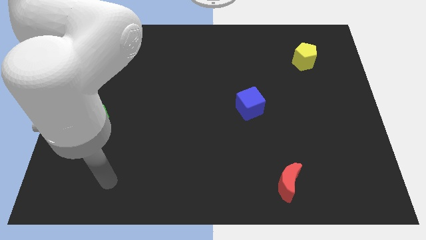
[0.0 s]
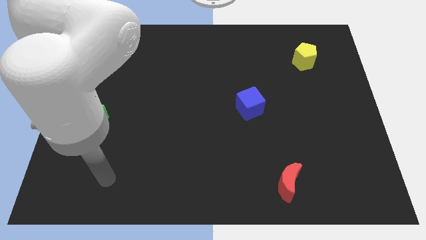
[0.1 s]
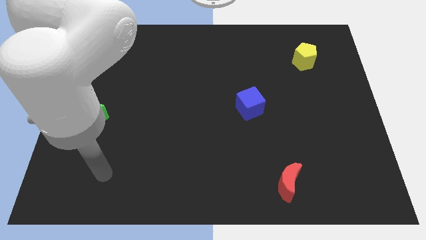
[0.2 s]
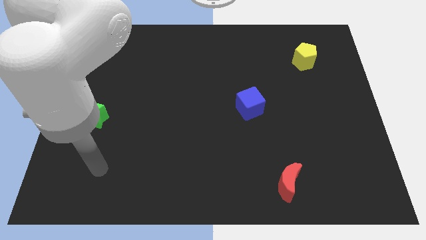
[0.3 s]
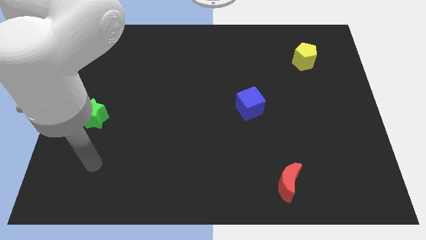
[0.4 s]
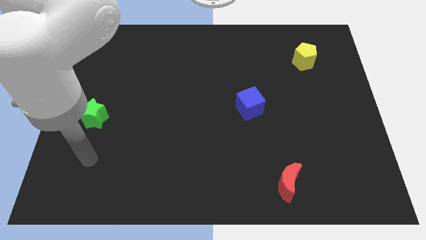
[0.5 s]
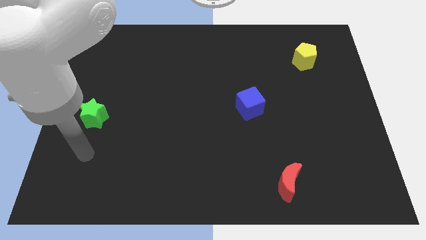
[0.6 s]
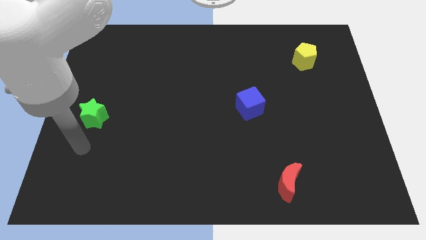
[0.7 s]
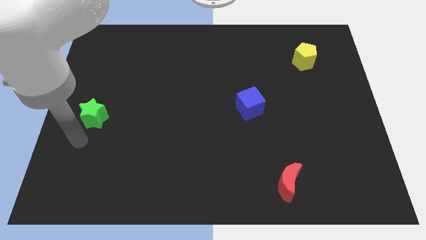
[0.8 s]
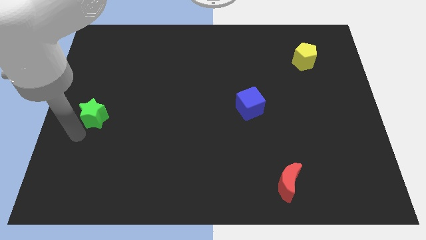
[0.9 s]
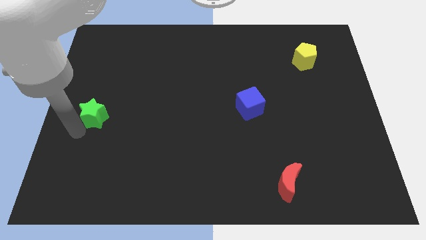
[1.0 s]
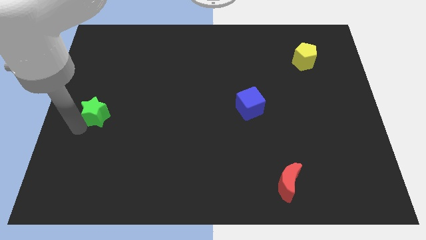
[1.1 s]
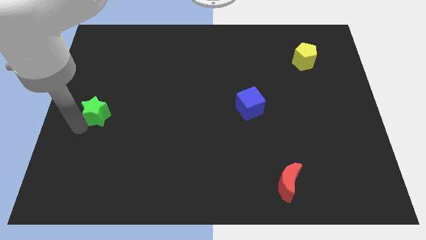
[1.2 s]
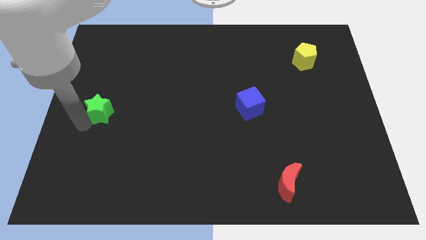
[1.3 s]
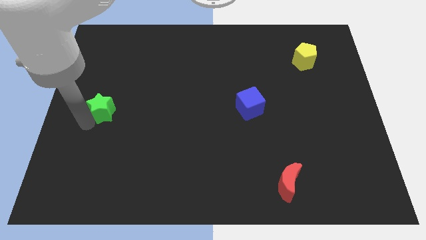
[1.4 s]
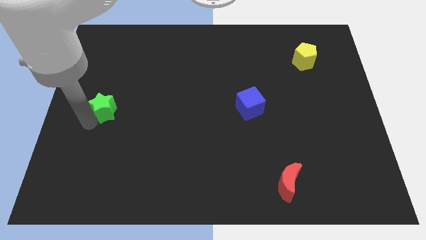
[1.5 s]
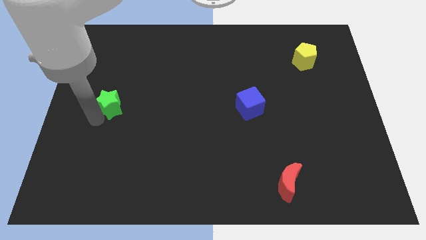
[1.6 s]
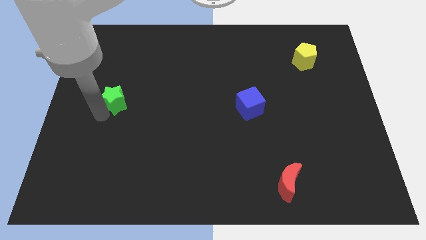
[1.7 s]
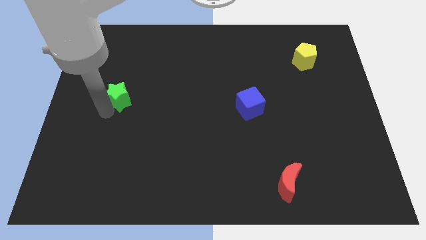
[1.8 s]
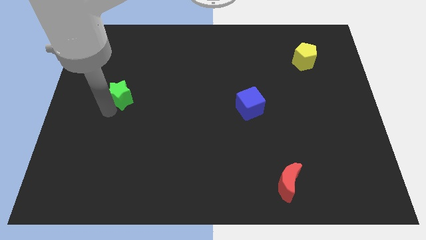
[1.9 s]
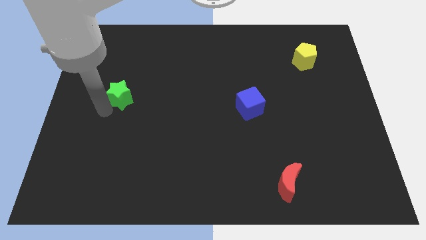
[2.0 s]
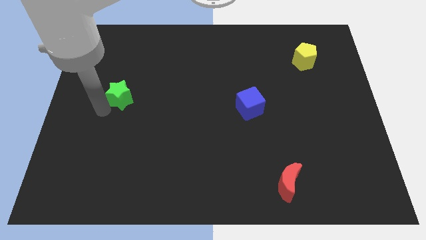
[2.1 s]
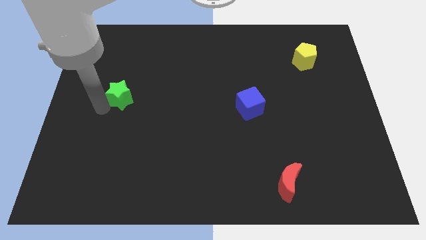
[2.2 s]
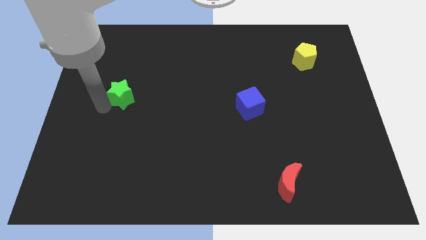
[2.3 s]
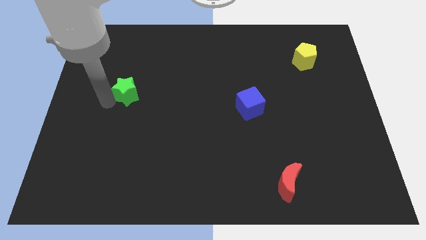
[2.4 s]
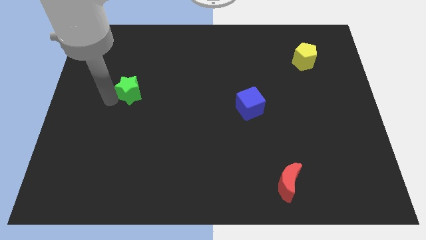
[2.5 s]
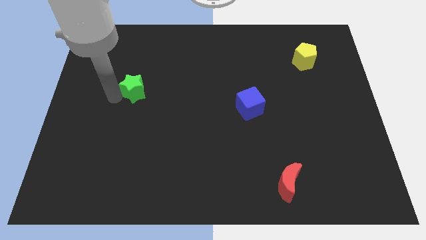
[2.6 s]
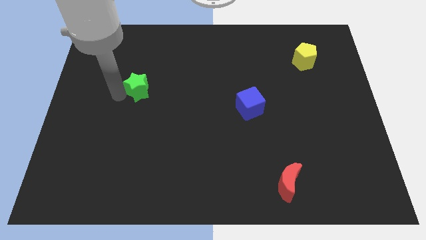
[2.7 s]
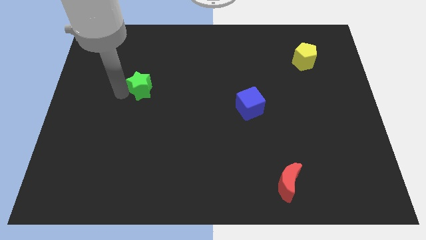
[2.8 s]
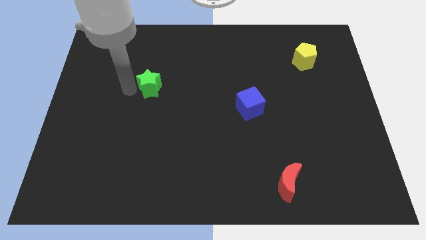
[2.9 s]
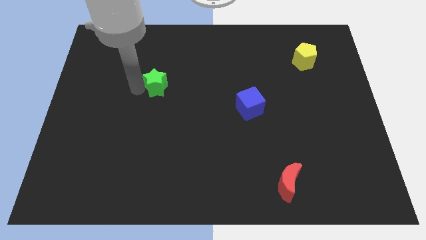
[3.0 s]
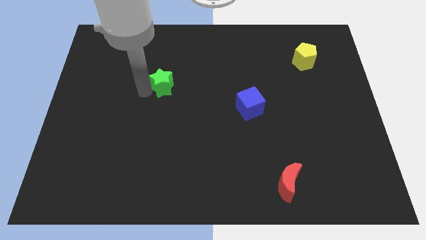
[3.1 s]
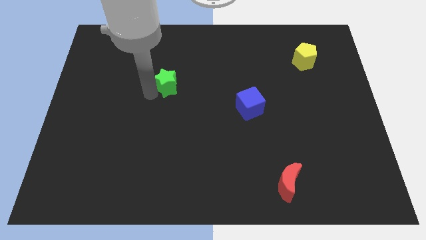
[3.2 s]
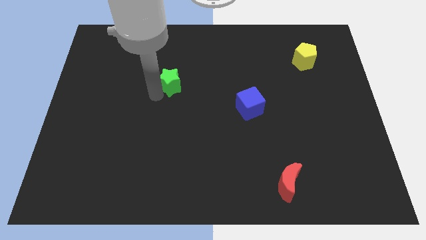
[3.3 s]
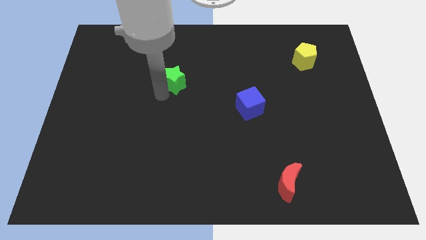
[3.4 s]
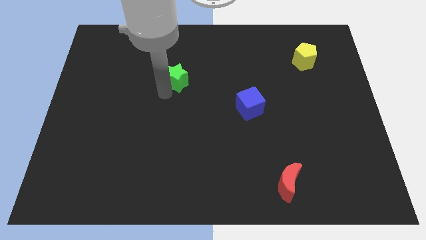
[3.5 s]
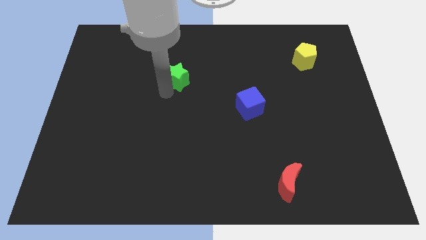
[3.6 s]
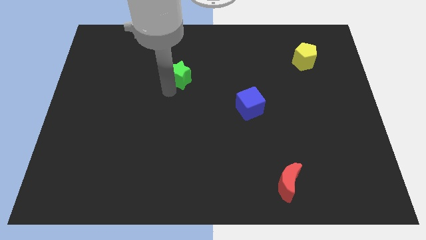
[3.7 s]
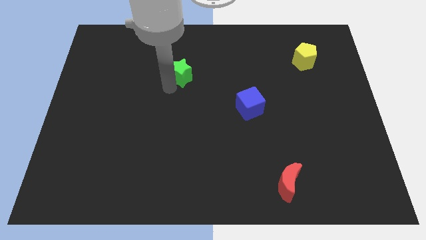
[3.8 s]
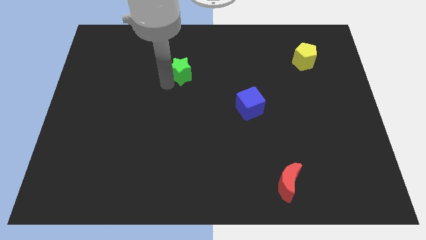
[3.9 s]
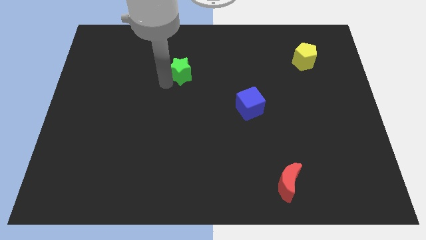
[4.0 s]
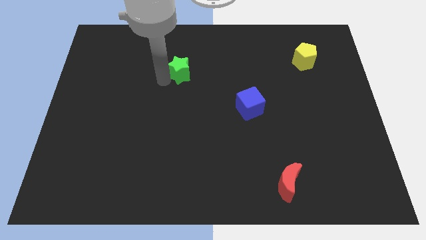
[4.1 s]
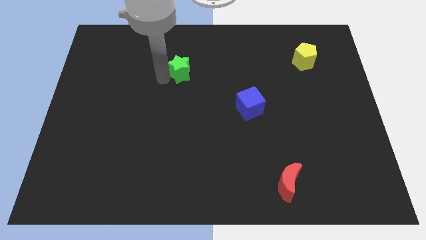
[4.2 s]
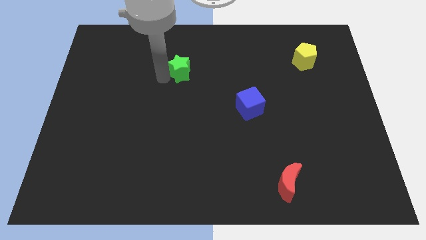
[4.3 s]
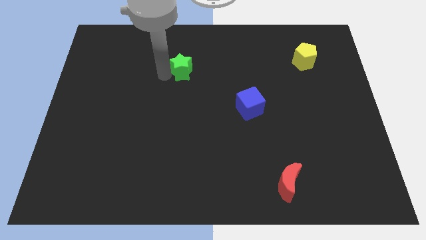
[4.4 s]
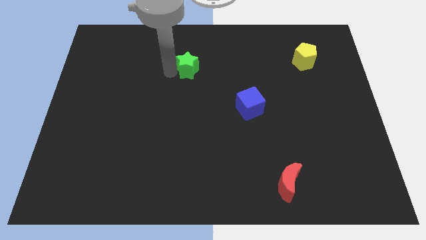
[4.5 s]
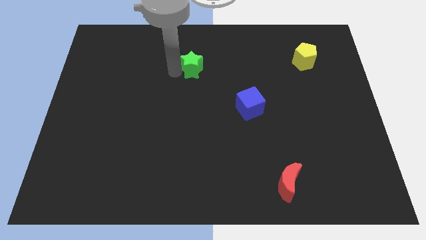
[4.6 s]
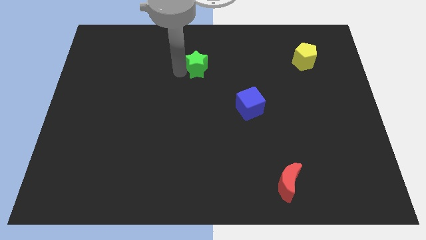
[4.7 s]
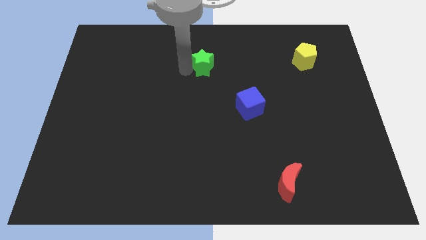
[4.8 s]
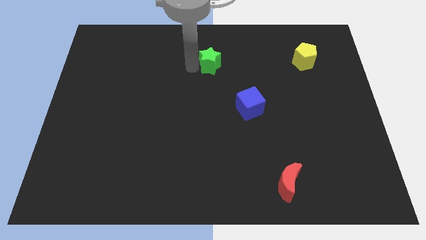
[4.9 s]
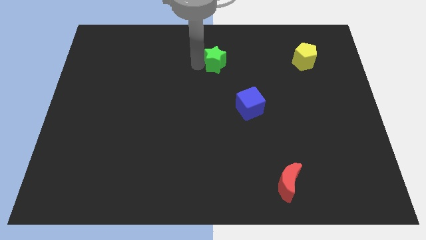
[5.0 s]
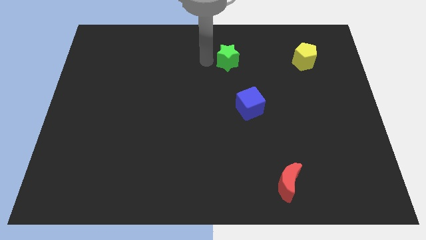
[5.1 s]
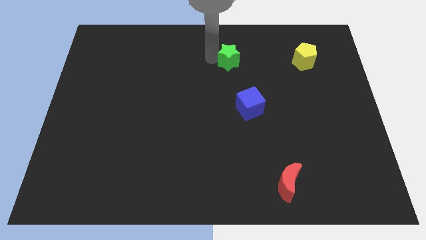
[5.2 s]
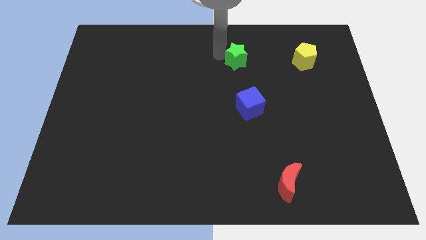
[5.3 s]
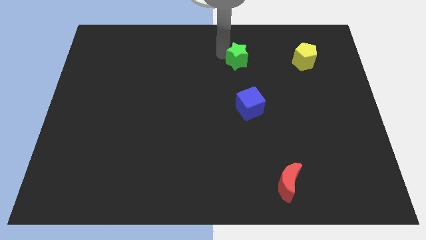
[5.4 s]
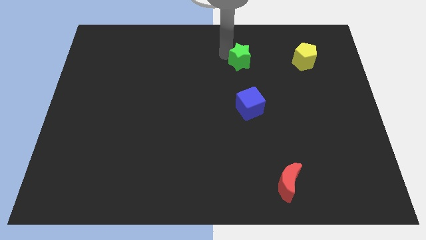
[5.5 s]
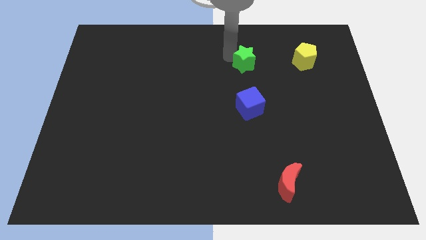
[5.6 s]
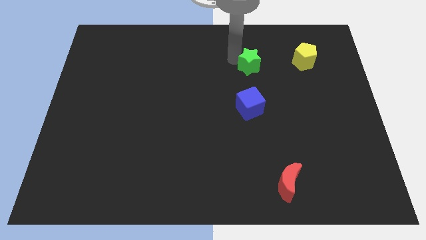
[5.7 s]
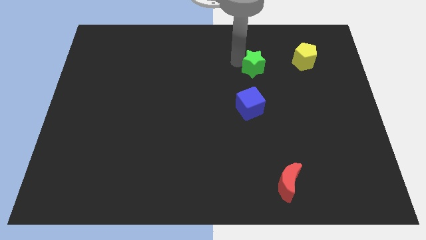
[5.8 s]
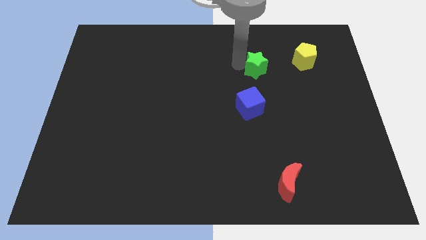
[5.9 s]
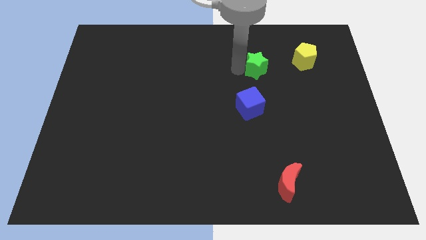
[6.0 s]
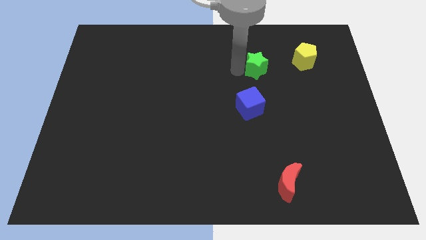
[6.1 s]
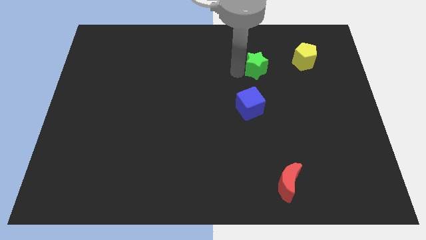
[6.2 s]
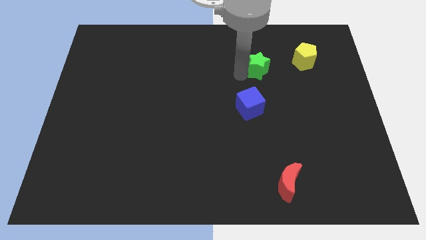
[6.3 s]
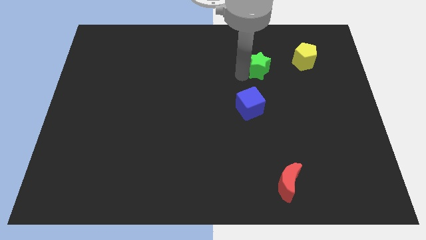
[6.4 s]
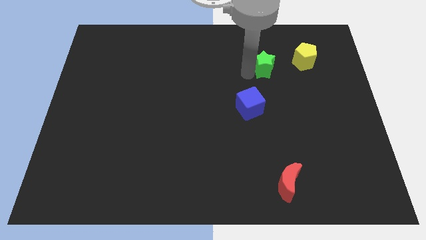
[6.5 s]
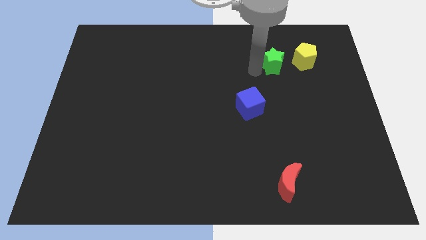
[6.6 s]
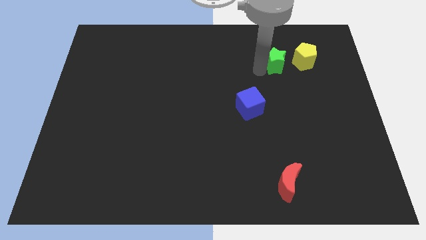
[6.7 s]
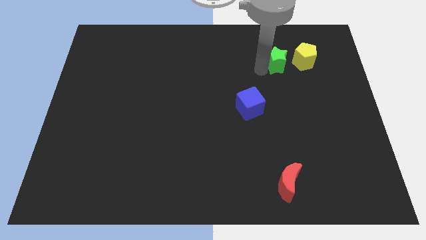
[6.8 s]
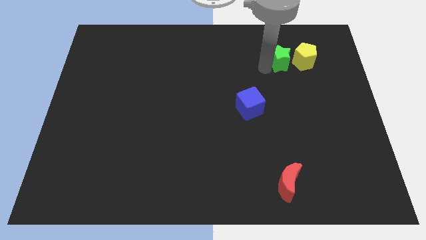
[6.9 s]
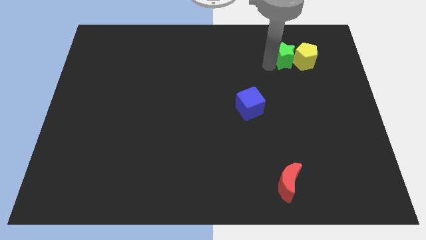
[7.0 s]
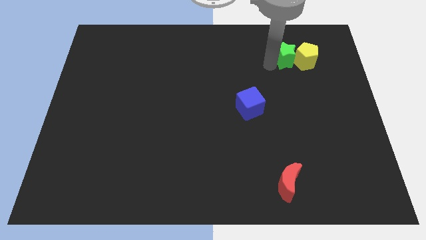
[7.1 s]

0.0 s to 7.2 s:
slide the star to the pentagon

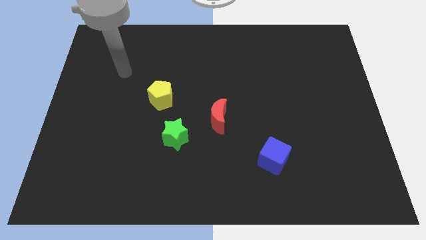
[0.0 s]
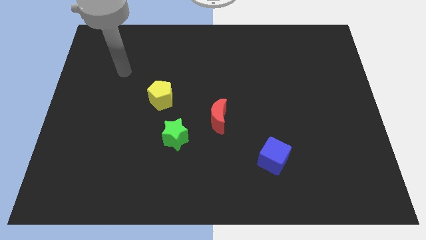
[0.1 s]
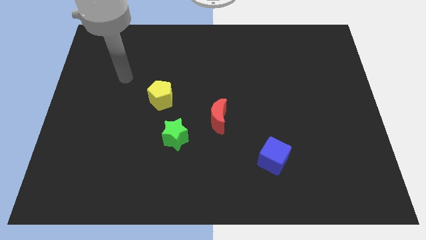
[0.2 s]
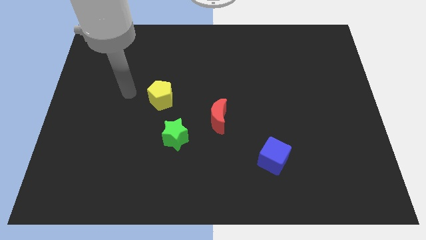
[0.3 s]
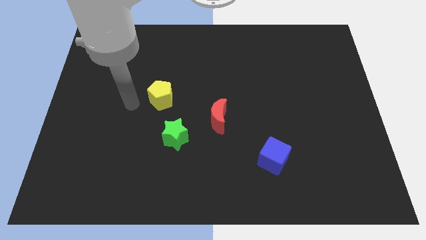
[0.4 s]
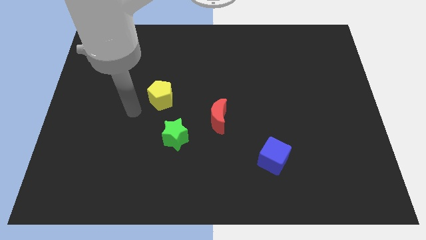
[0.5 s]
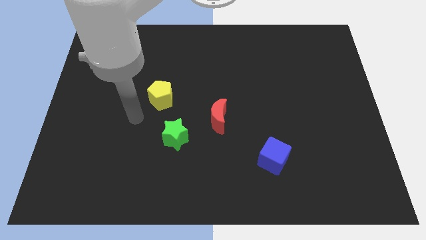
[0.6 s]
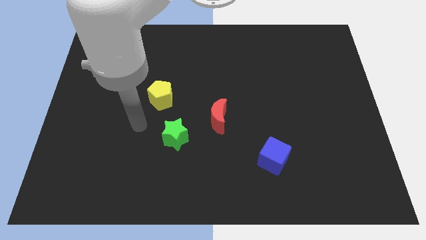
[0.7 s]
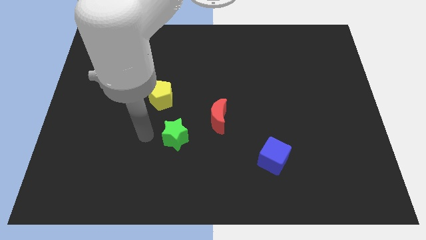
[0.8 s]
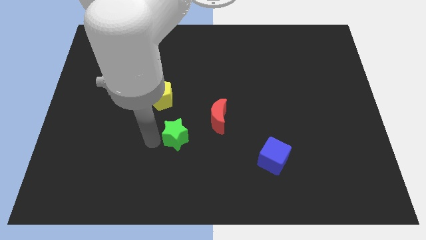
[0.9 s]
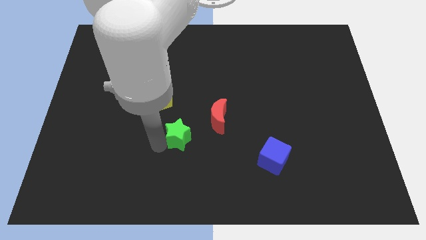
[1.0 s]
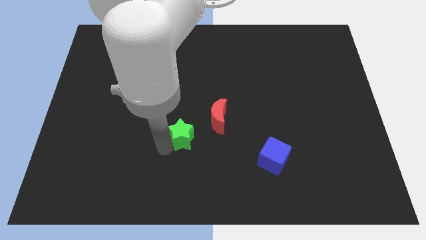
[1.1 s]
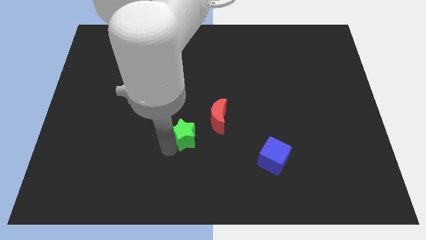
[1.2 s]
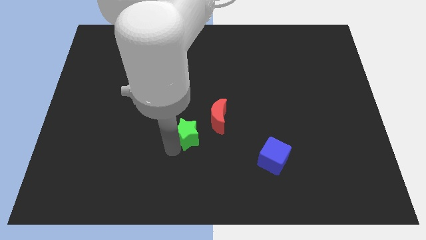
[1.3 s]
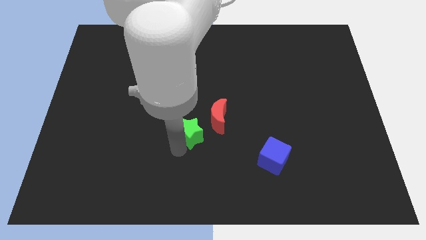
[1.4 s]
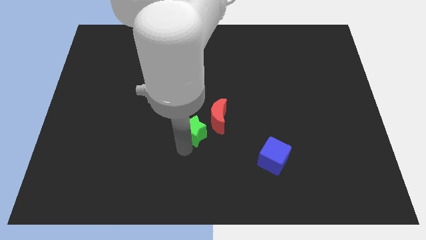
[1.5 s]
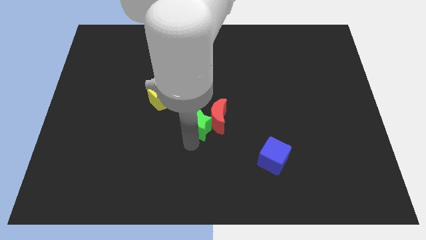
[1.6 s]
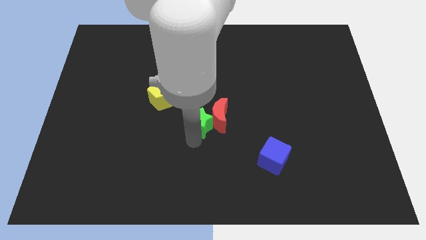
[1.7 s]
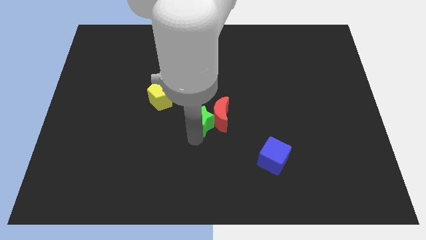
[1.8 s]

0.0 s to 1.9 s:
put the green star close to the red block
